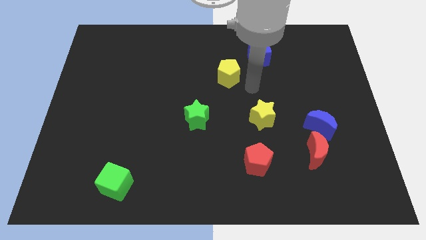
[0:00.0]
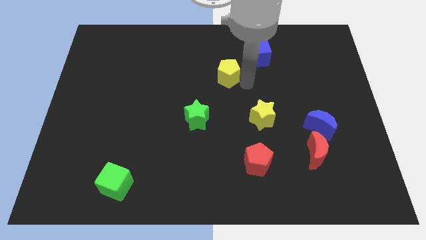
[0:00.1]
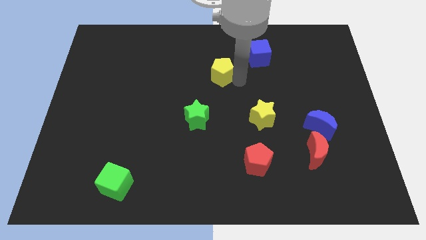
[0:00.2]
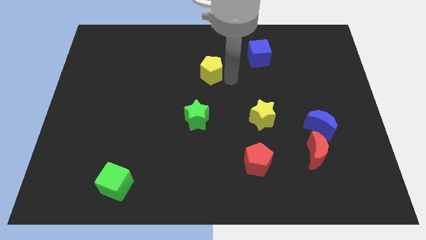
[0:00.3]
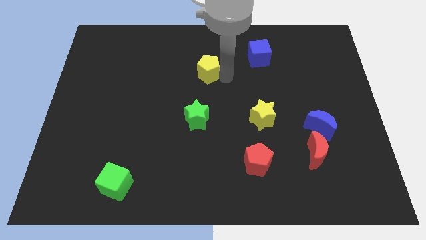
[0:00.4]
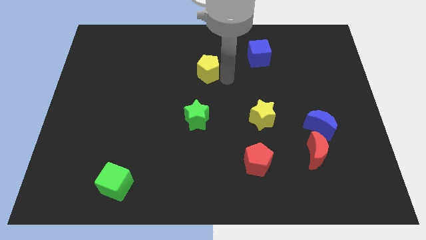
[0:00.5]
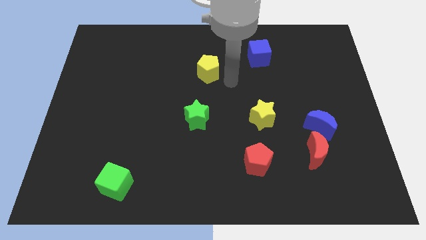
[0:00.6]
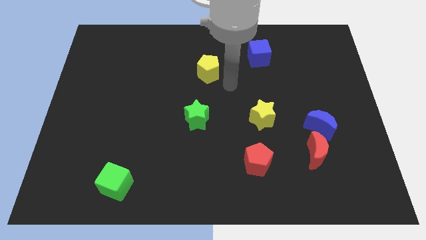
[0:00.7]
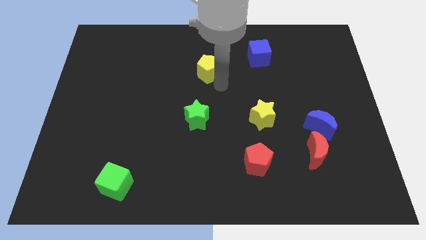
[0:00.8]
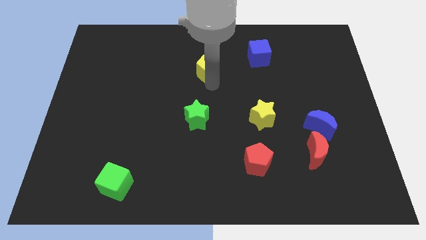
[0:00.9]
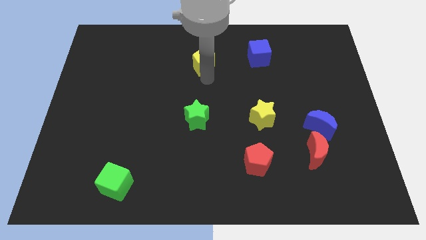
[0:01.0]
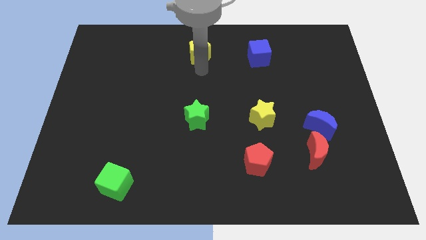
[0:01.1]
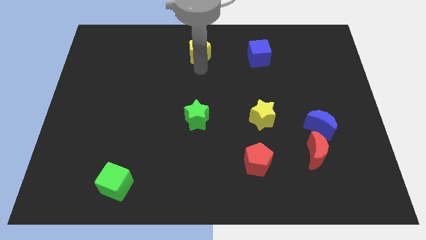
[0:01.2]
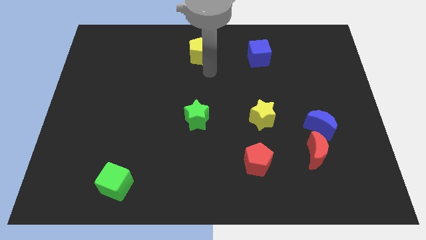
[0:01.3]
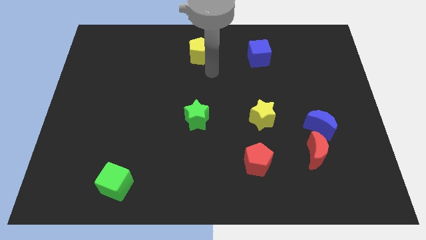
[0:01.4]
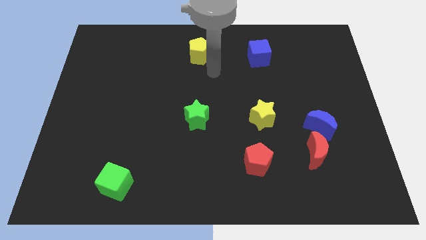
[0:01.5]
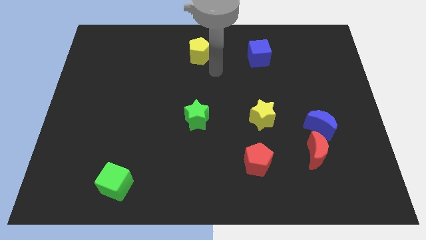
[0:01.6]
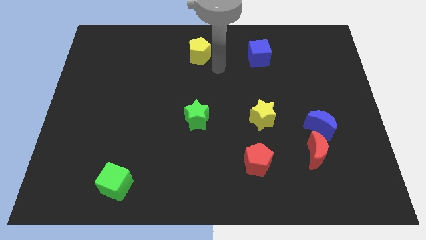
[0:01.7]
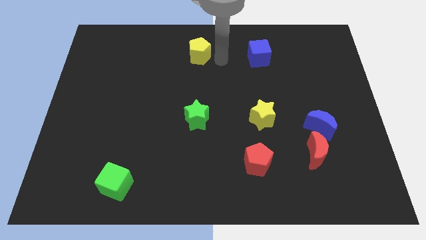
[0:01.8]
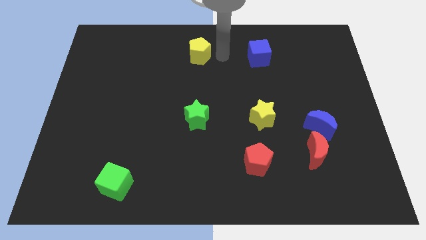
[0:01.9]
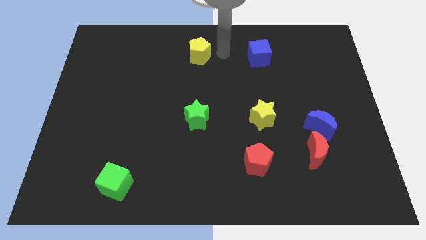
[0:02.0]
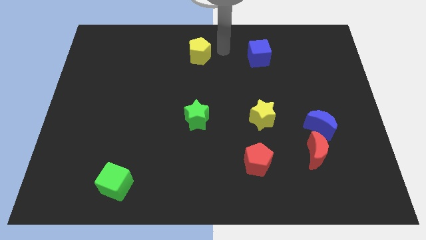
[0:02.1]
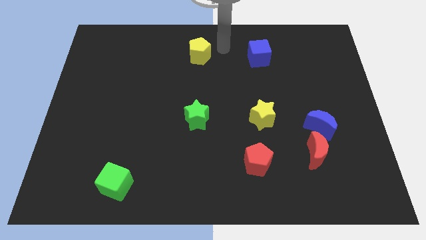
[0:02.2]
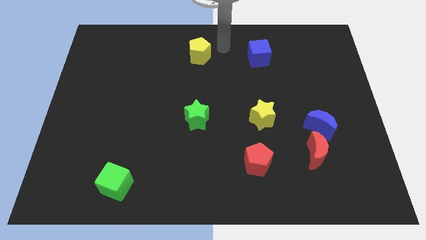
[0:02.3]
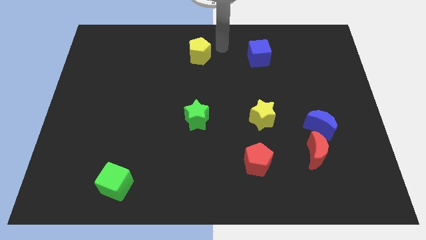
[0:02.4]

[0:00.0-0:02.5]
place the yellow pentagon at the top of the green star

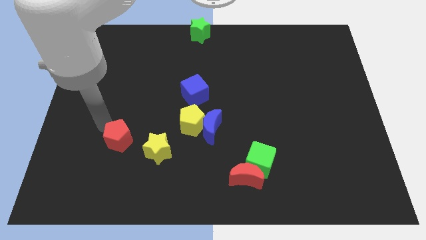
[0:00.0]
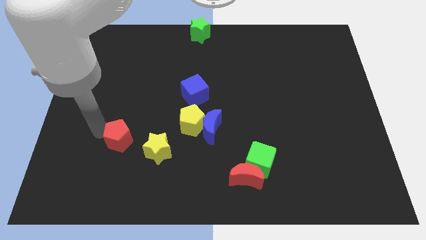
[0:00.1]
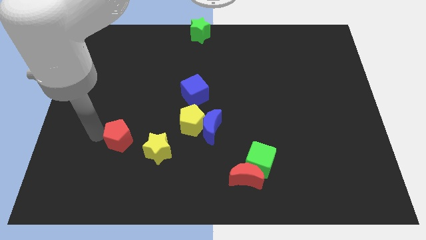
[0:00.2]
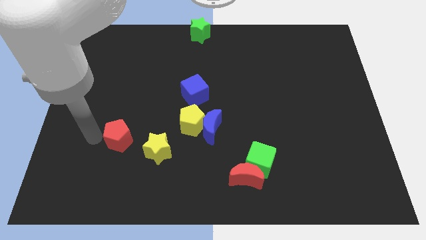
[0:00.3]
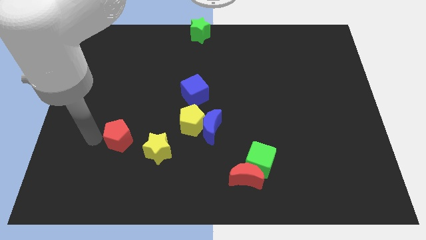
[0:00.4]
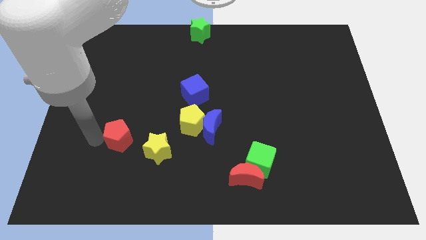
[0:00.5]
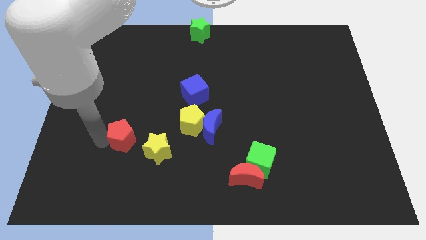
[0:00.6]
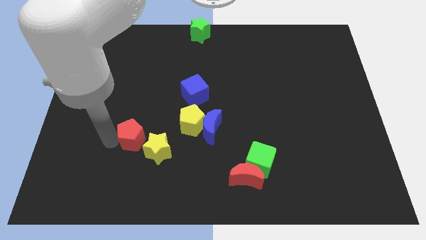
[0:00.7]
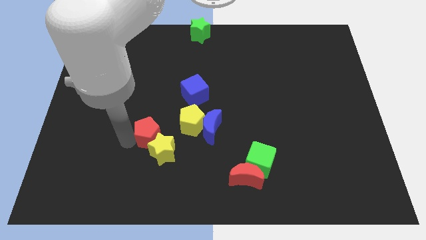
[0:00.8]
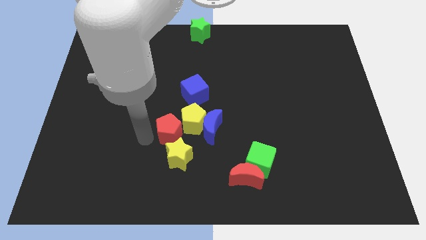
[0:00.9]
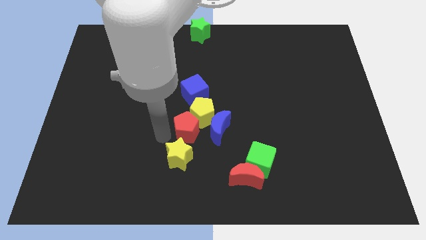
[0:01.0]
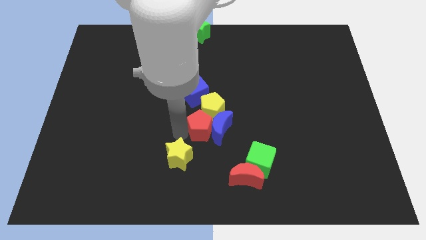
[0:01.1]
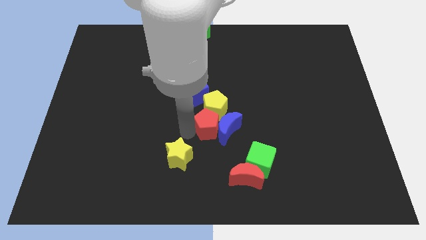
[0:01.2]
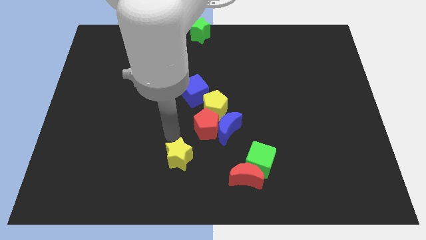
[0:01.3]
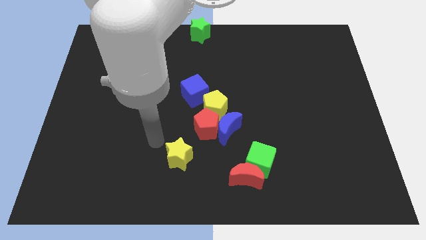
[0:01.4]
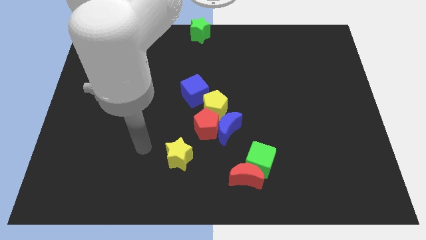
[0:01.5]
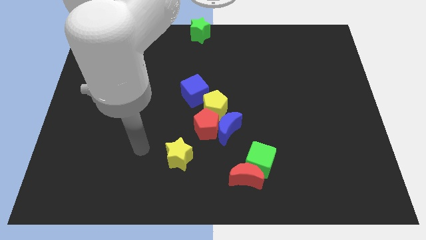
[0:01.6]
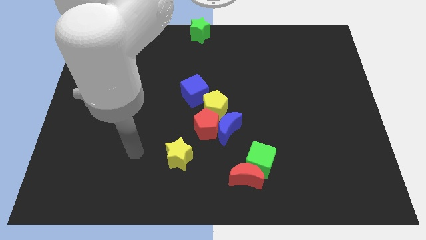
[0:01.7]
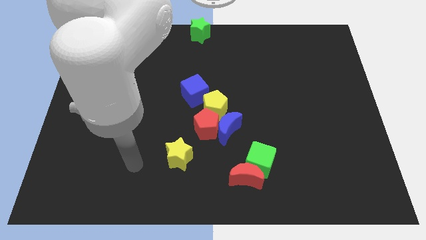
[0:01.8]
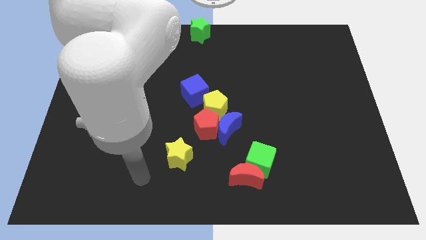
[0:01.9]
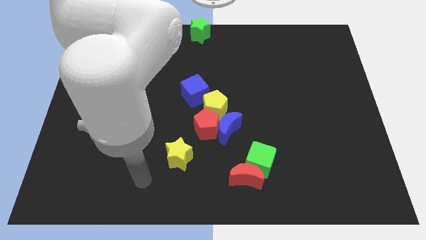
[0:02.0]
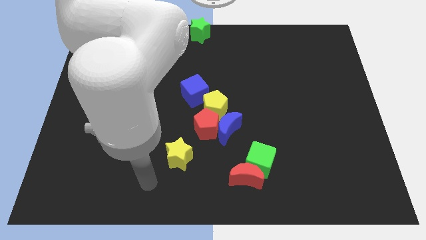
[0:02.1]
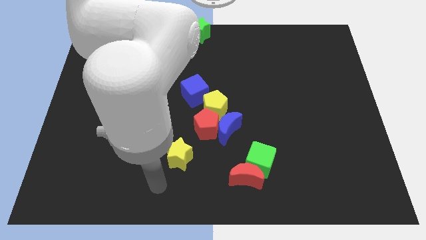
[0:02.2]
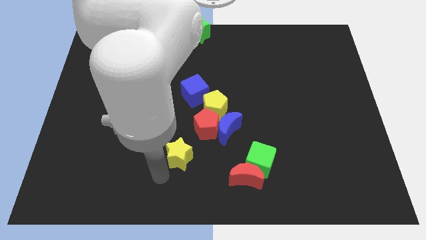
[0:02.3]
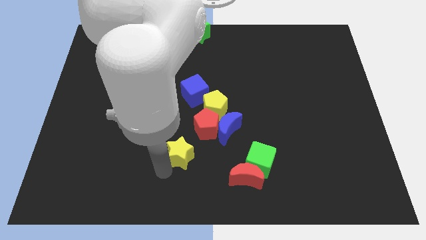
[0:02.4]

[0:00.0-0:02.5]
push the red pentagon into the group of blocks

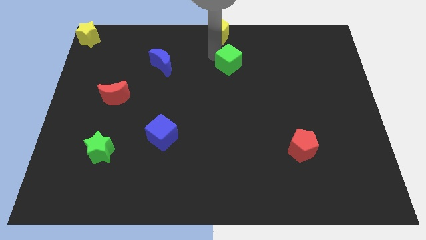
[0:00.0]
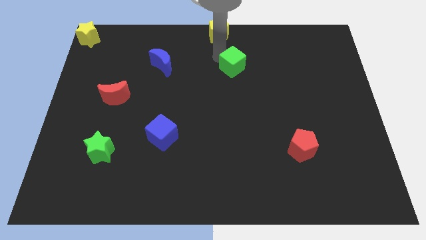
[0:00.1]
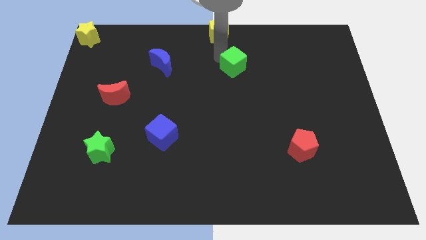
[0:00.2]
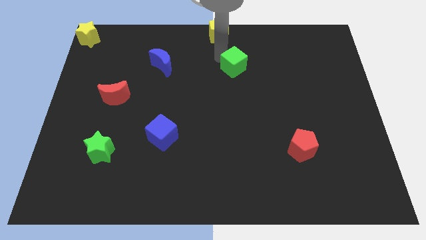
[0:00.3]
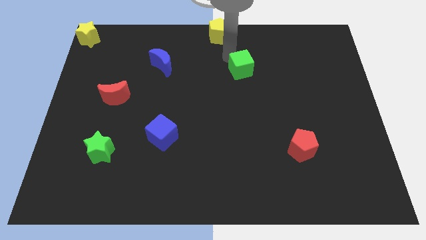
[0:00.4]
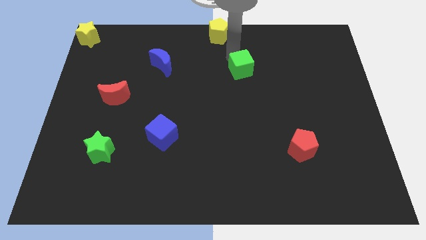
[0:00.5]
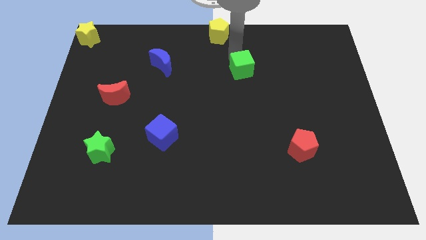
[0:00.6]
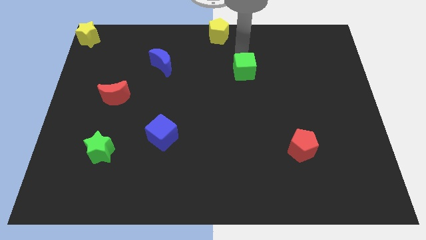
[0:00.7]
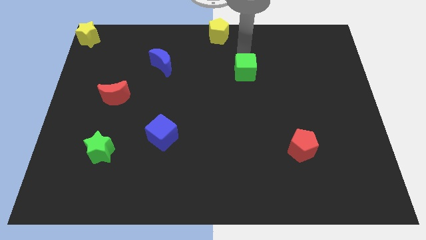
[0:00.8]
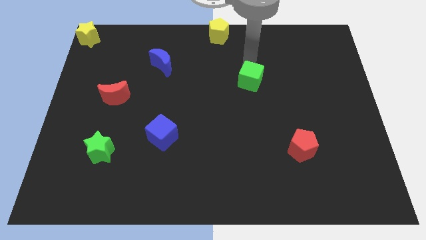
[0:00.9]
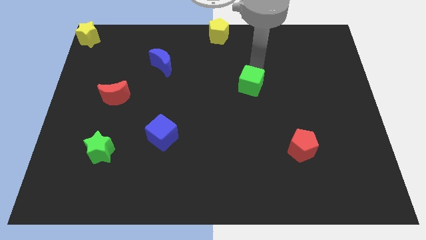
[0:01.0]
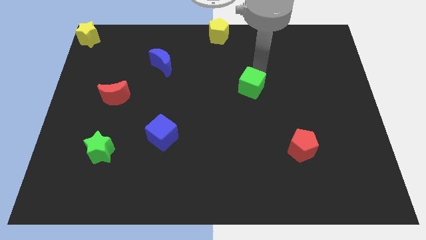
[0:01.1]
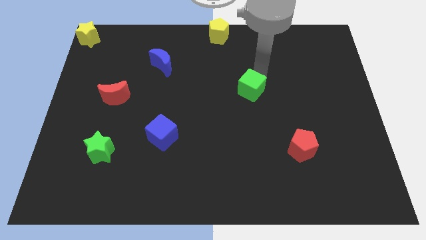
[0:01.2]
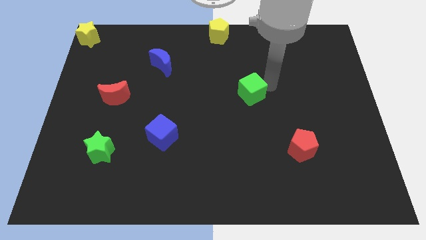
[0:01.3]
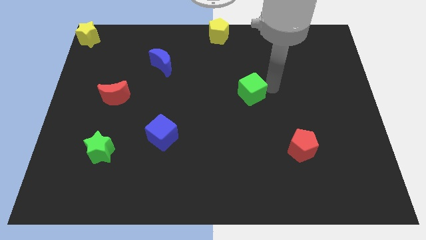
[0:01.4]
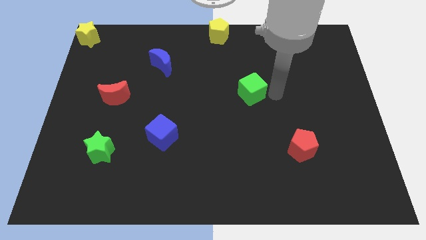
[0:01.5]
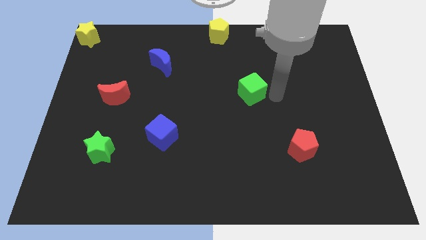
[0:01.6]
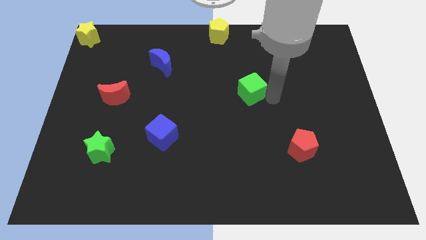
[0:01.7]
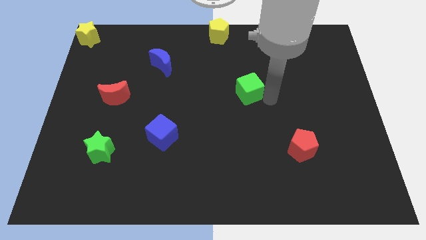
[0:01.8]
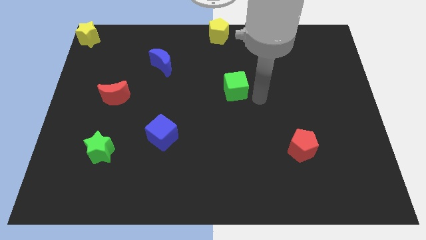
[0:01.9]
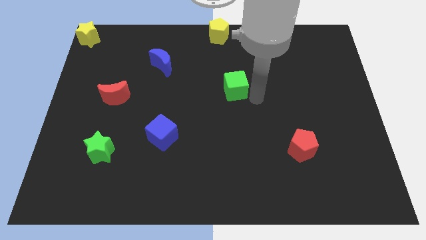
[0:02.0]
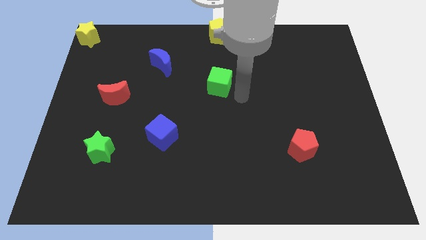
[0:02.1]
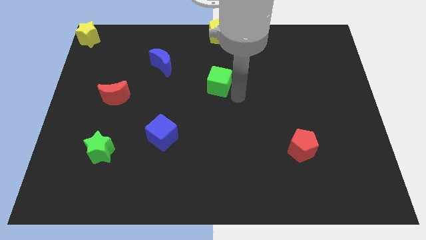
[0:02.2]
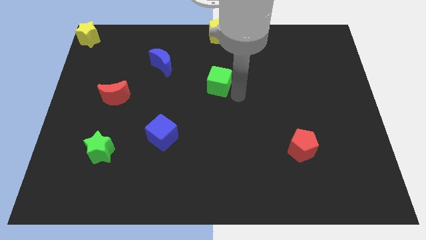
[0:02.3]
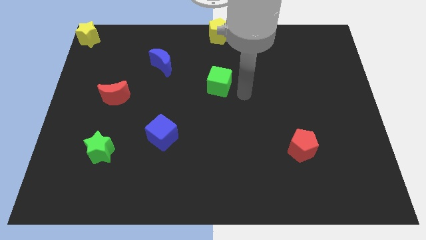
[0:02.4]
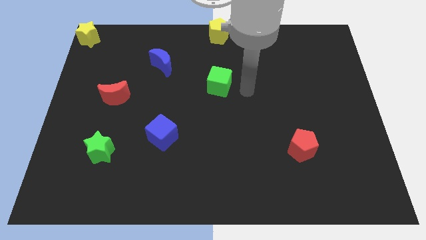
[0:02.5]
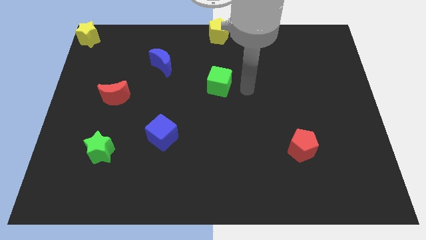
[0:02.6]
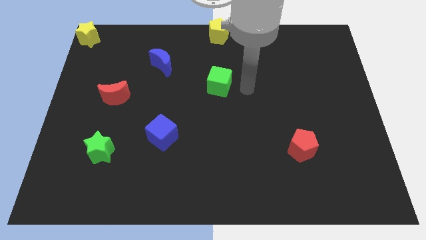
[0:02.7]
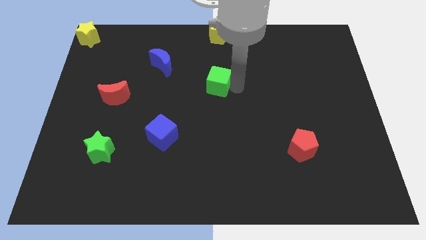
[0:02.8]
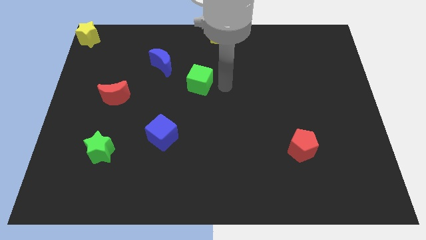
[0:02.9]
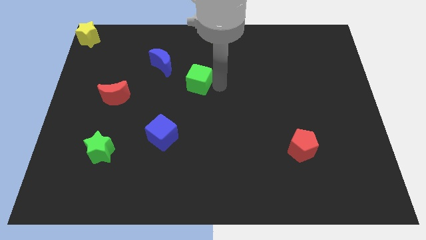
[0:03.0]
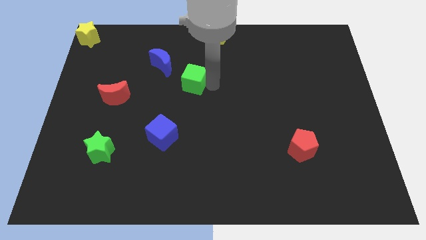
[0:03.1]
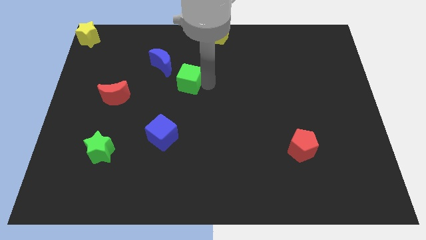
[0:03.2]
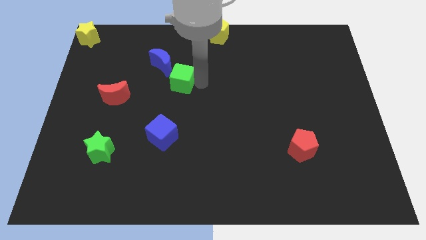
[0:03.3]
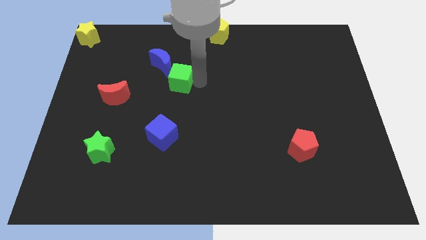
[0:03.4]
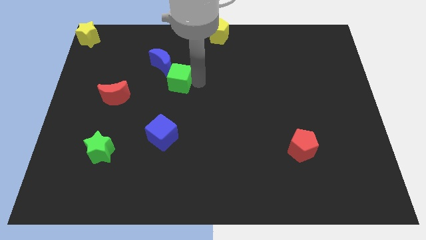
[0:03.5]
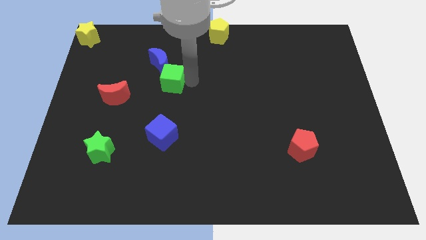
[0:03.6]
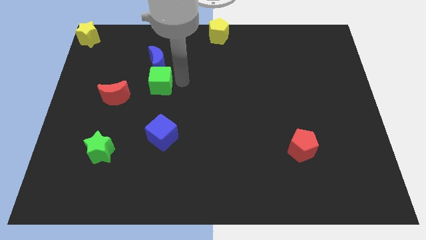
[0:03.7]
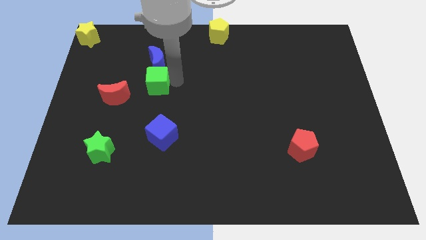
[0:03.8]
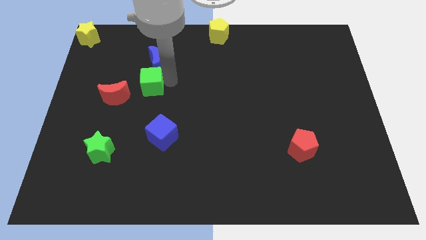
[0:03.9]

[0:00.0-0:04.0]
push the green cube to the left of the board
